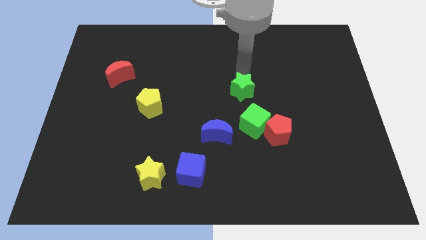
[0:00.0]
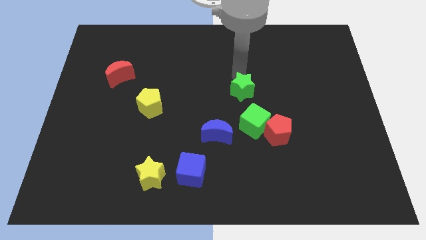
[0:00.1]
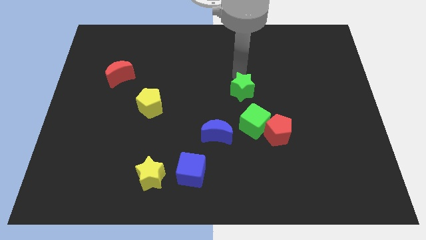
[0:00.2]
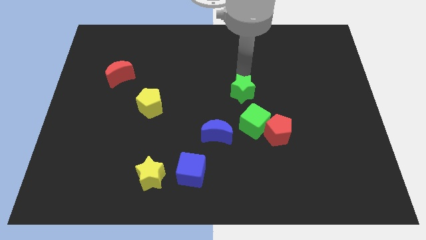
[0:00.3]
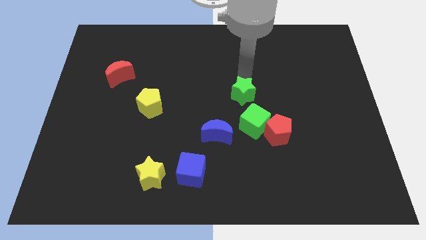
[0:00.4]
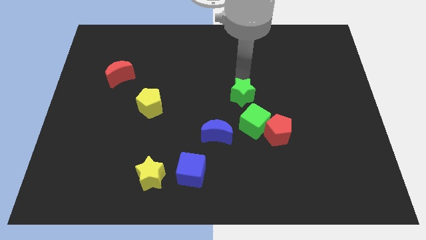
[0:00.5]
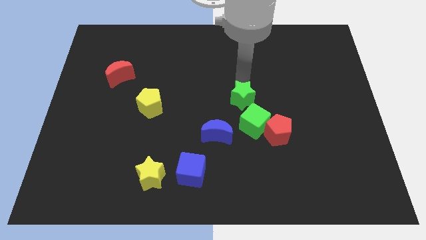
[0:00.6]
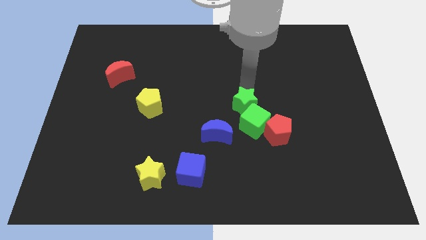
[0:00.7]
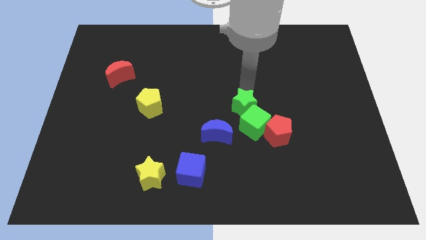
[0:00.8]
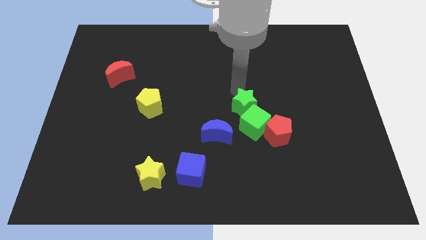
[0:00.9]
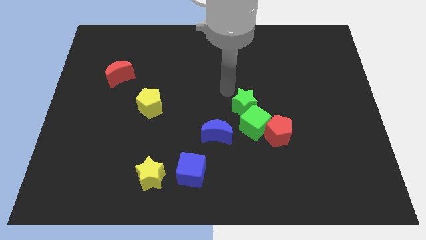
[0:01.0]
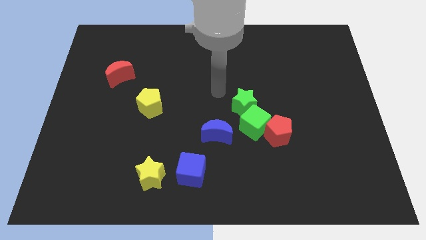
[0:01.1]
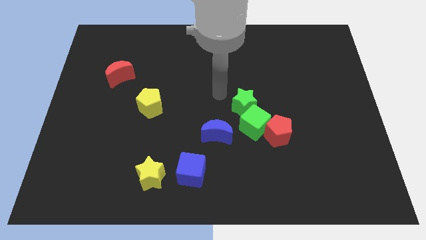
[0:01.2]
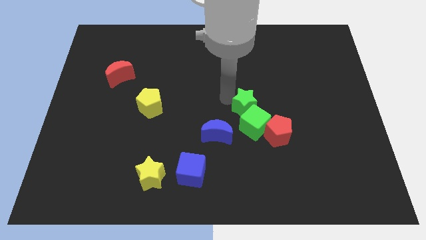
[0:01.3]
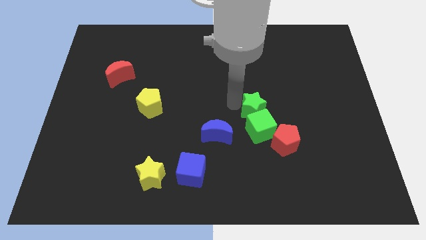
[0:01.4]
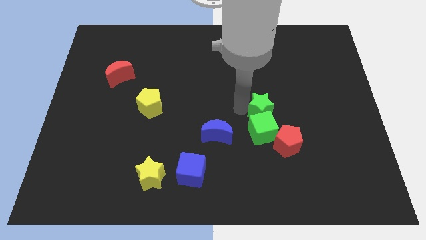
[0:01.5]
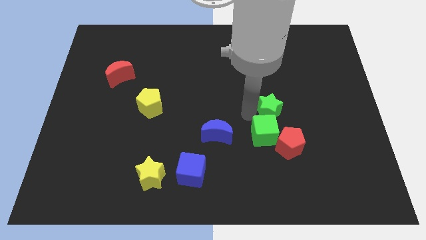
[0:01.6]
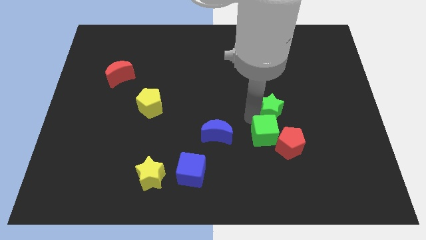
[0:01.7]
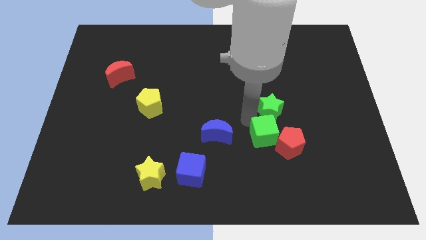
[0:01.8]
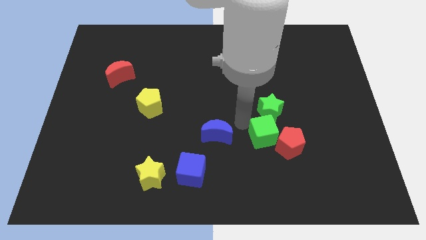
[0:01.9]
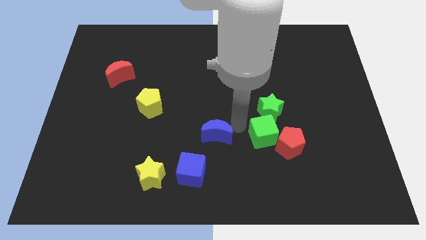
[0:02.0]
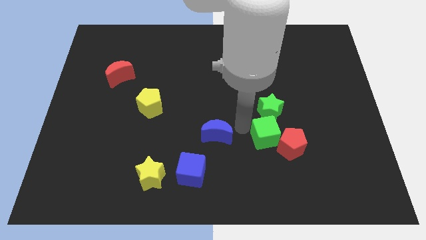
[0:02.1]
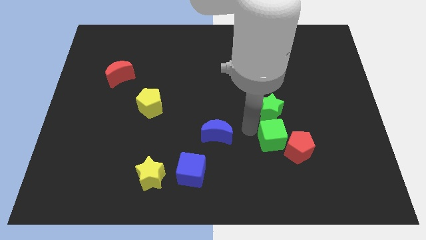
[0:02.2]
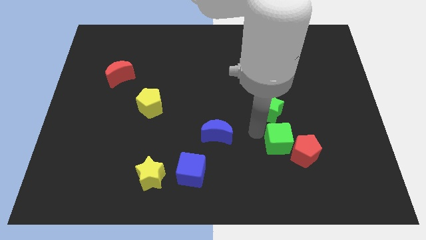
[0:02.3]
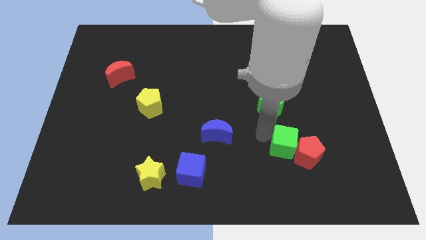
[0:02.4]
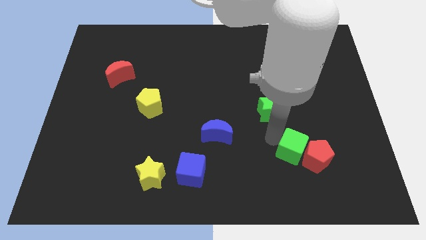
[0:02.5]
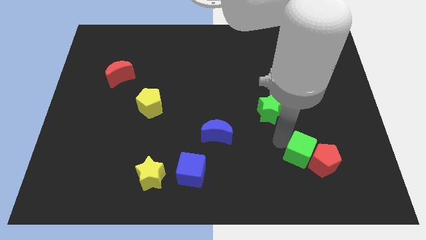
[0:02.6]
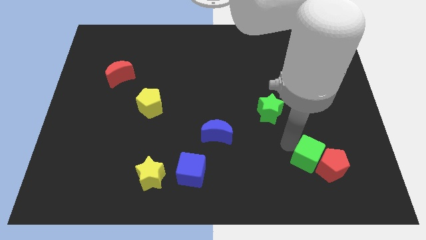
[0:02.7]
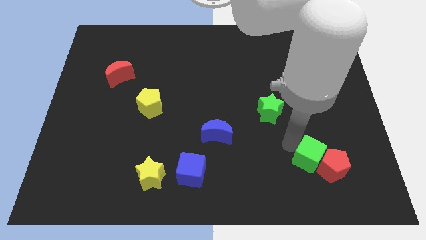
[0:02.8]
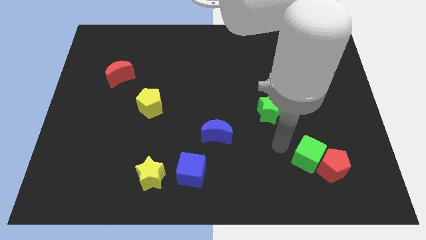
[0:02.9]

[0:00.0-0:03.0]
push the green cube into red pentagon

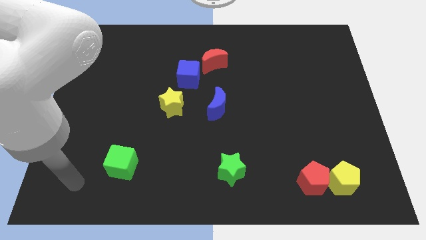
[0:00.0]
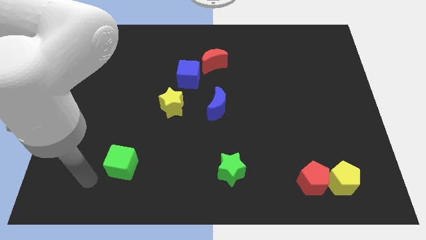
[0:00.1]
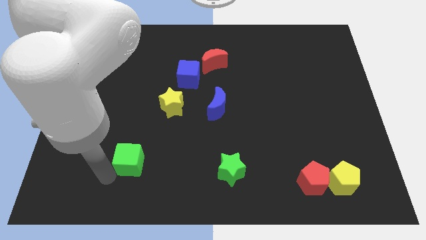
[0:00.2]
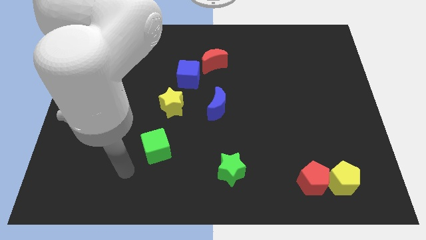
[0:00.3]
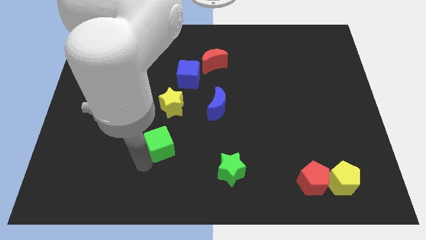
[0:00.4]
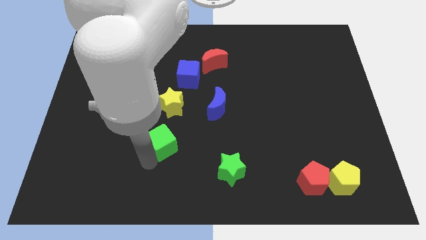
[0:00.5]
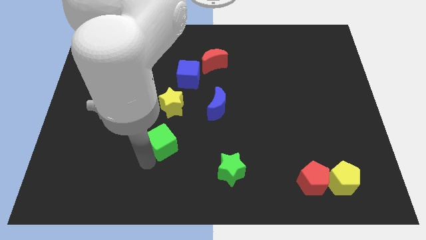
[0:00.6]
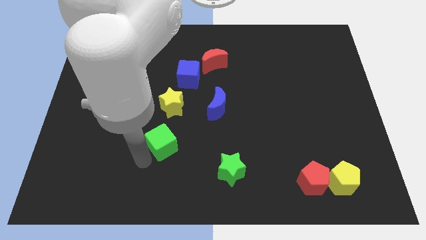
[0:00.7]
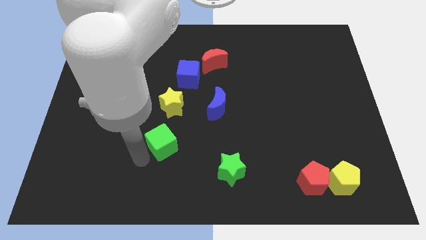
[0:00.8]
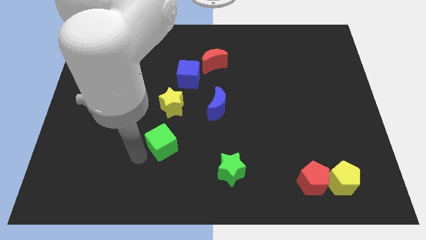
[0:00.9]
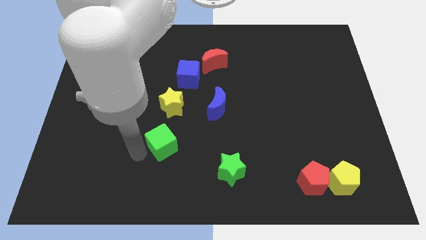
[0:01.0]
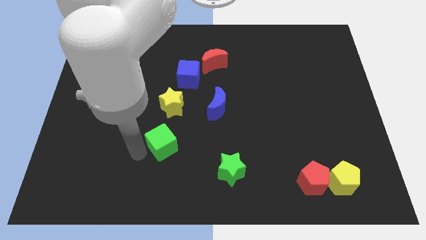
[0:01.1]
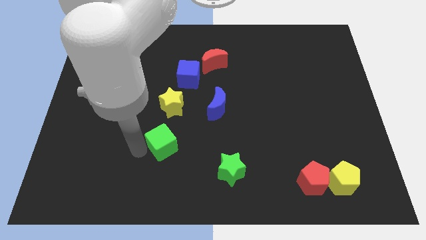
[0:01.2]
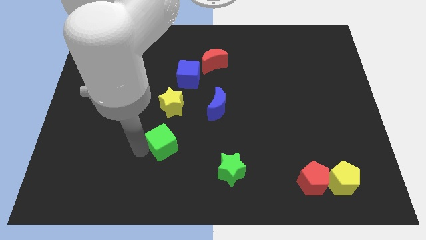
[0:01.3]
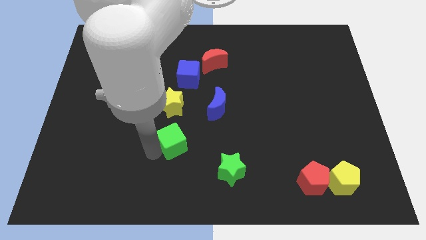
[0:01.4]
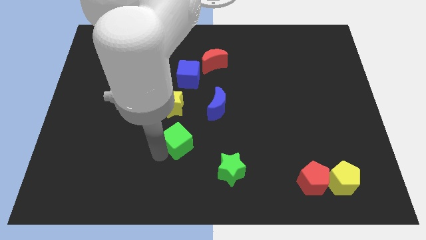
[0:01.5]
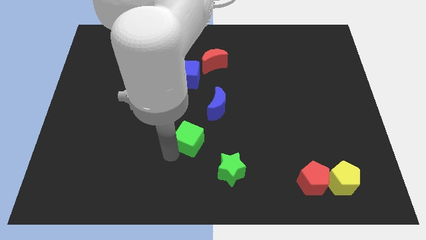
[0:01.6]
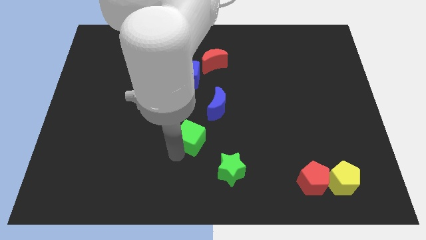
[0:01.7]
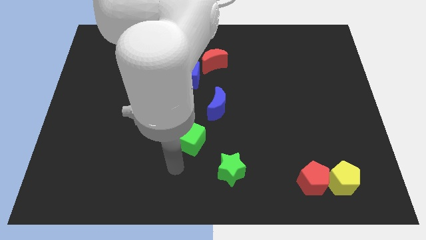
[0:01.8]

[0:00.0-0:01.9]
place the green cube close to the blue crescent

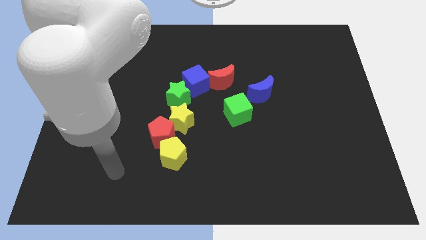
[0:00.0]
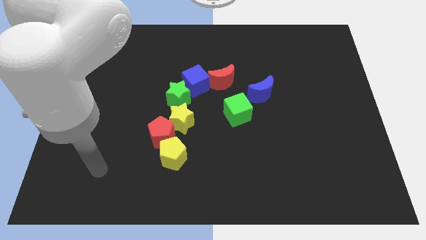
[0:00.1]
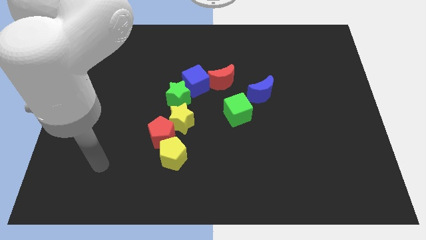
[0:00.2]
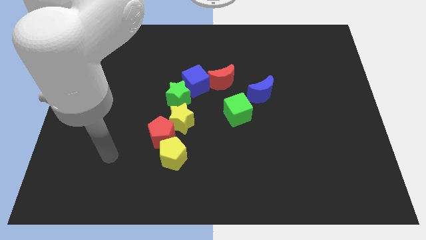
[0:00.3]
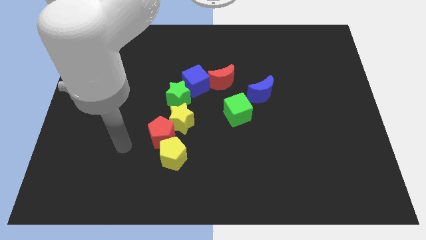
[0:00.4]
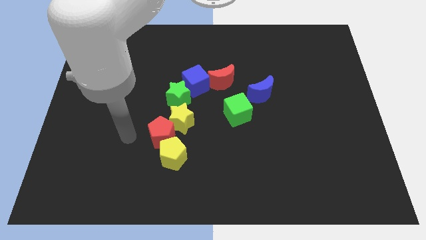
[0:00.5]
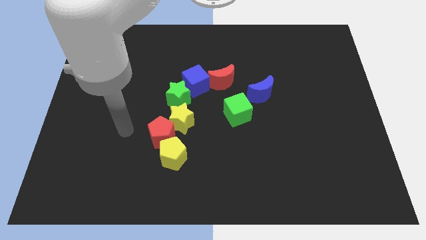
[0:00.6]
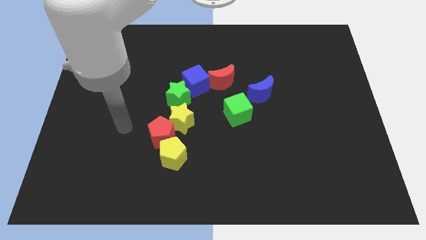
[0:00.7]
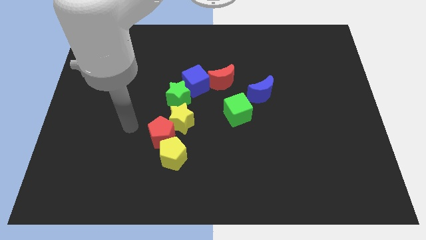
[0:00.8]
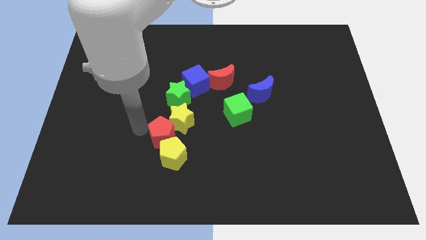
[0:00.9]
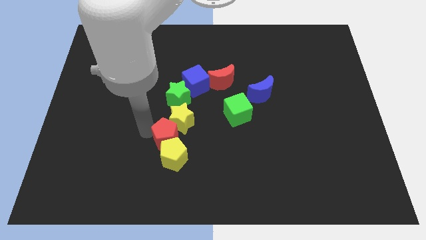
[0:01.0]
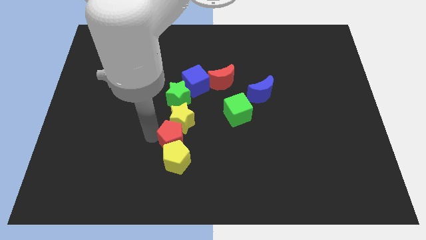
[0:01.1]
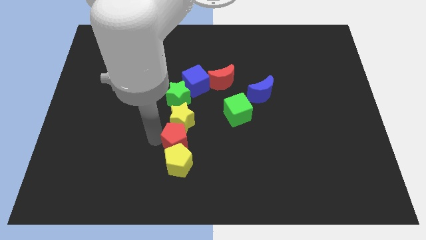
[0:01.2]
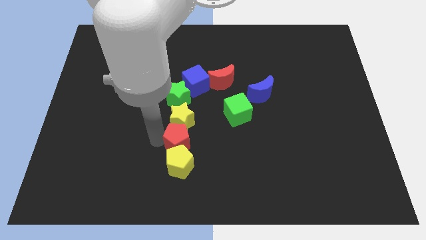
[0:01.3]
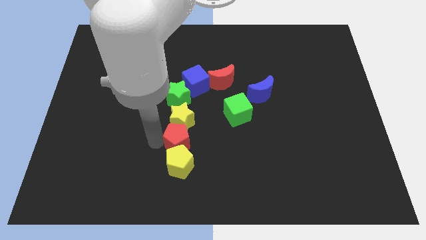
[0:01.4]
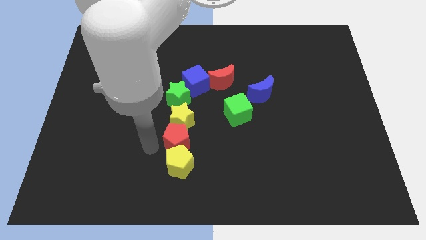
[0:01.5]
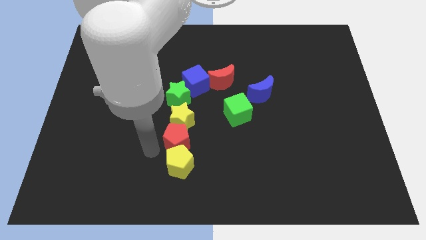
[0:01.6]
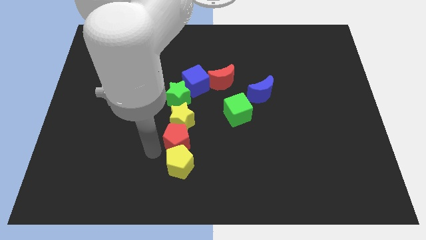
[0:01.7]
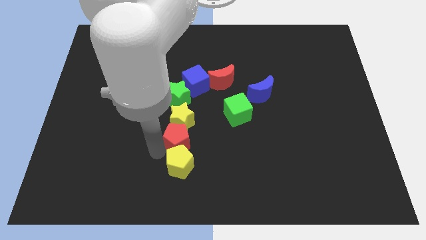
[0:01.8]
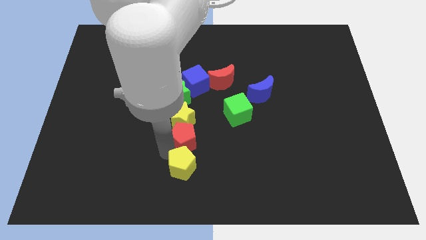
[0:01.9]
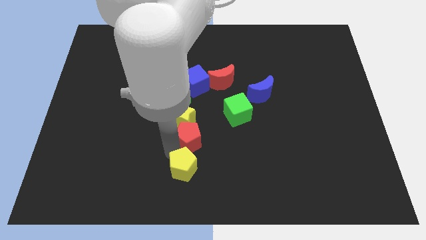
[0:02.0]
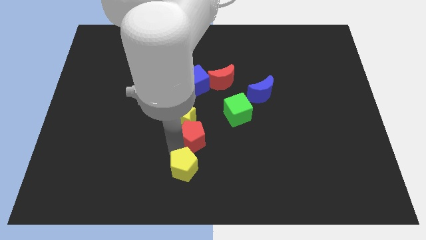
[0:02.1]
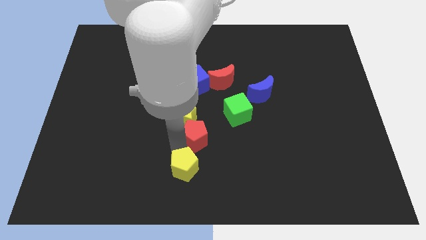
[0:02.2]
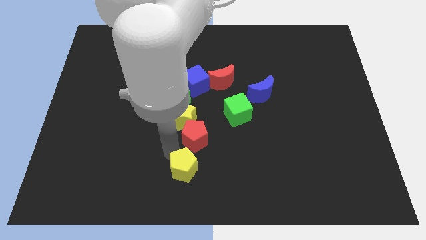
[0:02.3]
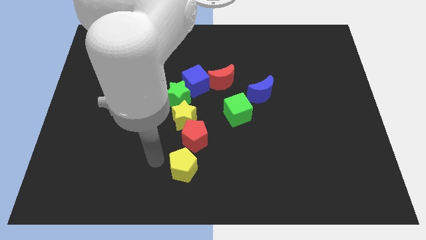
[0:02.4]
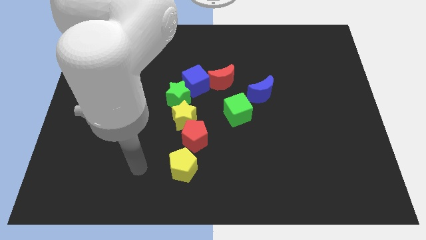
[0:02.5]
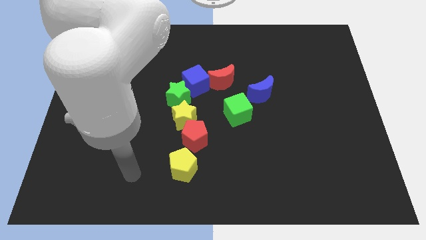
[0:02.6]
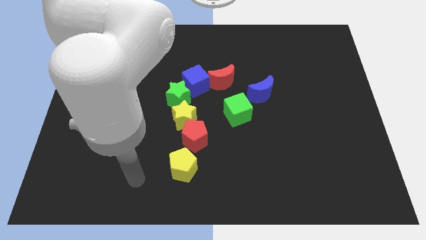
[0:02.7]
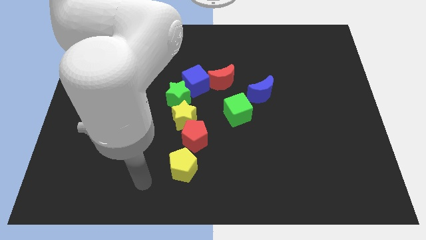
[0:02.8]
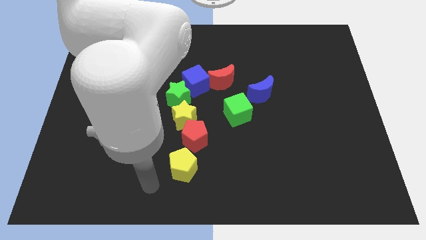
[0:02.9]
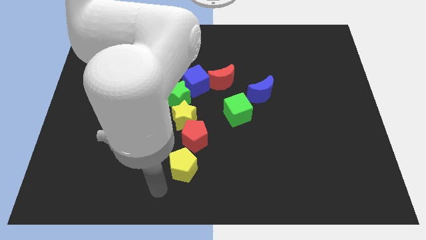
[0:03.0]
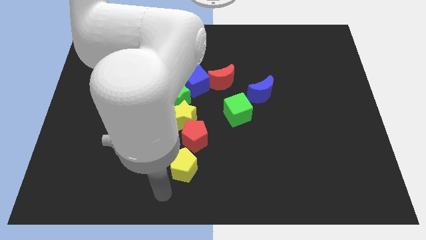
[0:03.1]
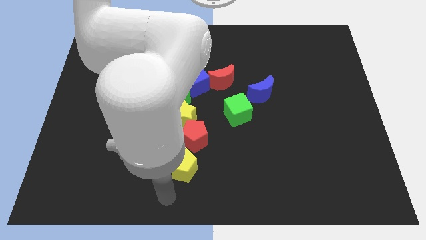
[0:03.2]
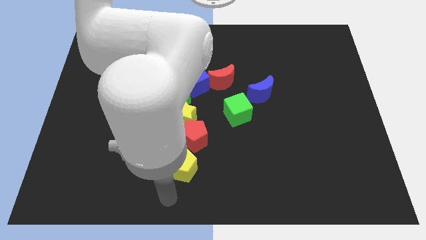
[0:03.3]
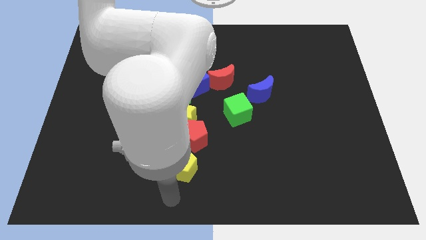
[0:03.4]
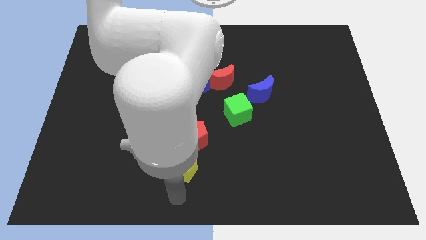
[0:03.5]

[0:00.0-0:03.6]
move red pentagon slightly right

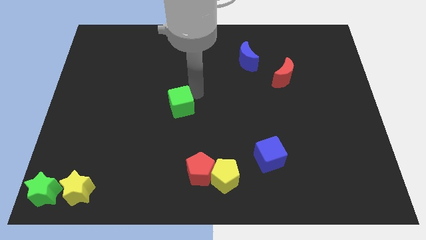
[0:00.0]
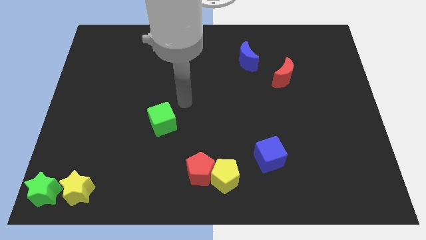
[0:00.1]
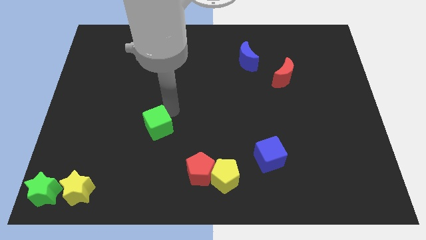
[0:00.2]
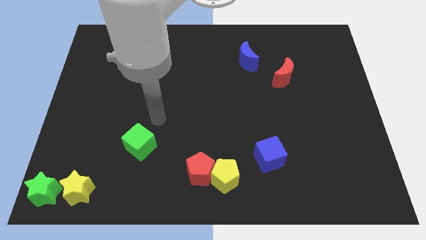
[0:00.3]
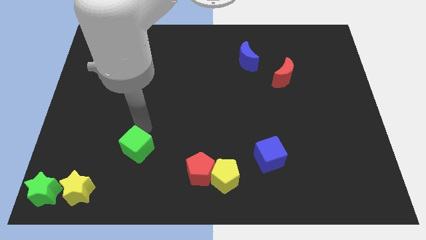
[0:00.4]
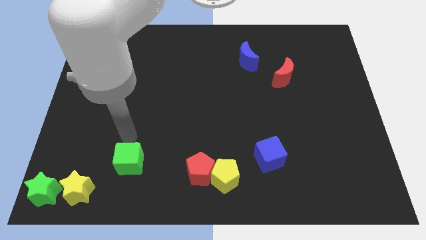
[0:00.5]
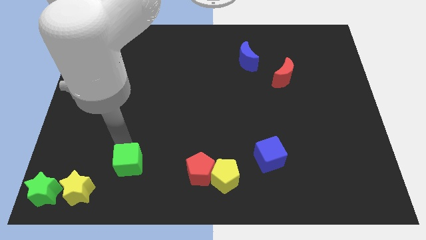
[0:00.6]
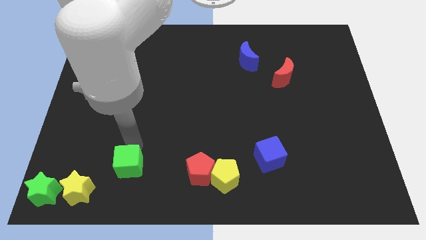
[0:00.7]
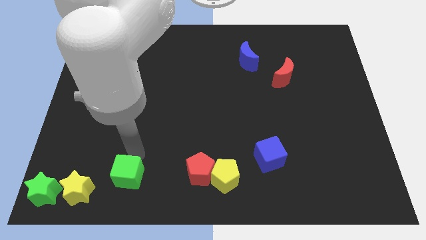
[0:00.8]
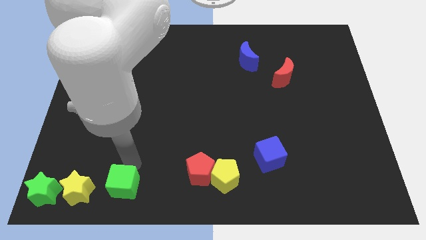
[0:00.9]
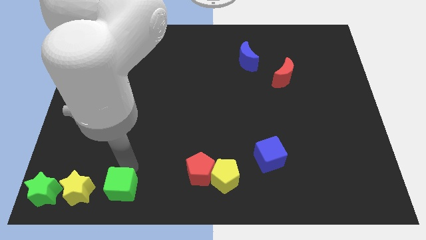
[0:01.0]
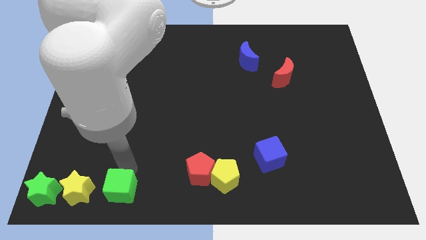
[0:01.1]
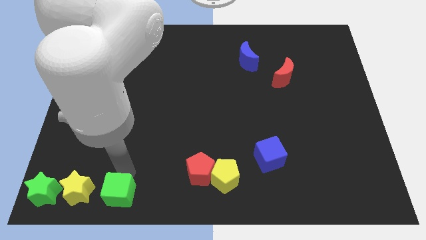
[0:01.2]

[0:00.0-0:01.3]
move the green cube to the right of the yellow star
